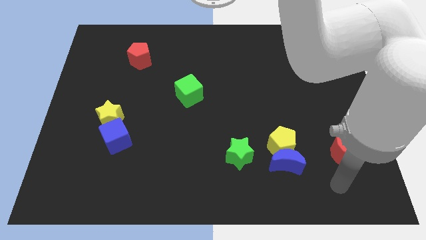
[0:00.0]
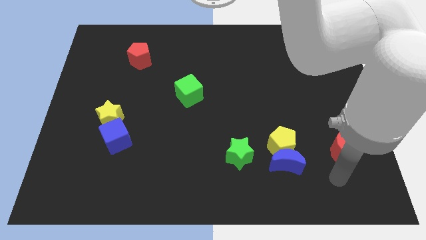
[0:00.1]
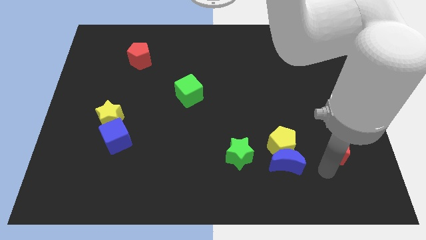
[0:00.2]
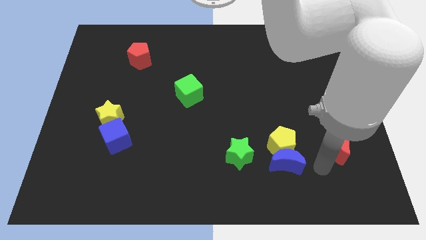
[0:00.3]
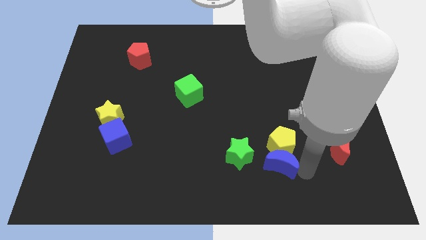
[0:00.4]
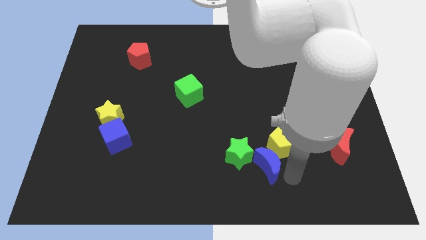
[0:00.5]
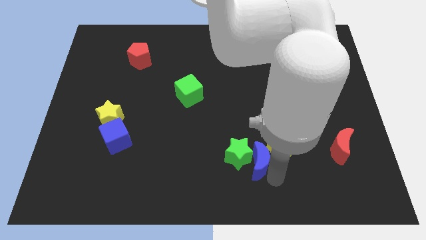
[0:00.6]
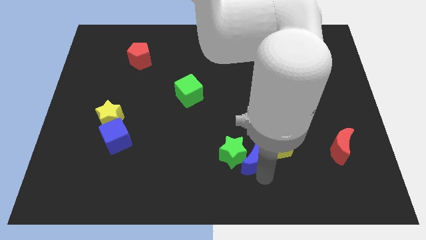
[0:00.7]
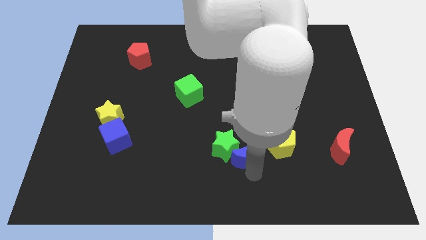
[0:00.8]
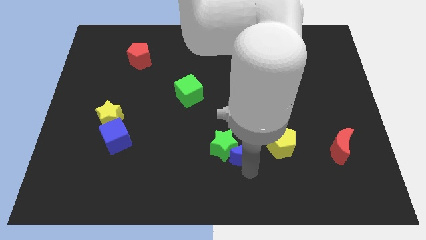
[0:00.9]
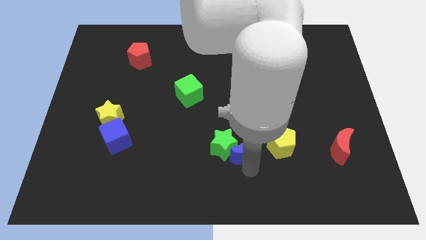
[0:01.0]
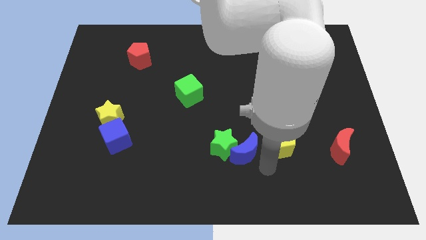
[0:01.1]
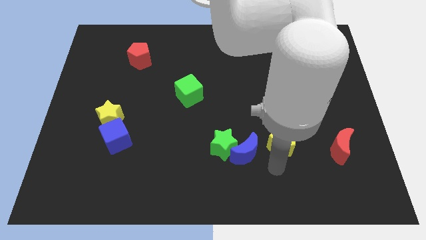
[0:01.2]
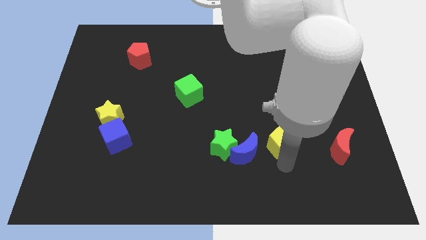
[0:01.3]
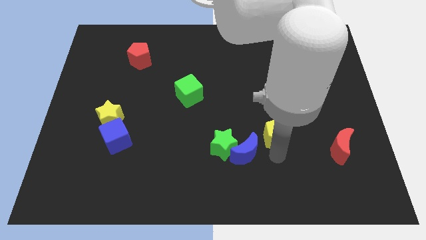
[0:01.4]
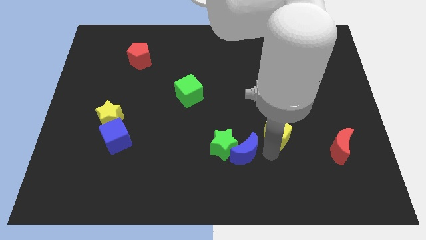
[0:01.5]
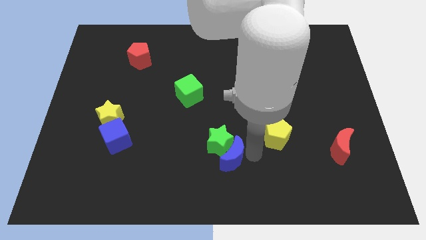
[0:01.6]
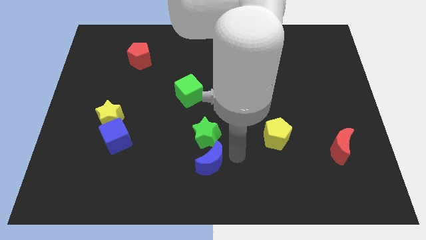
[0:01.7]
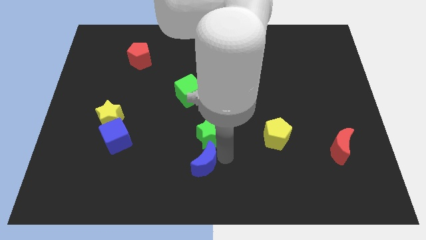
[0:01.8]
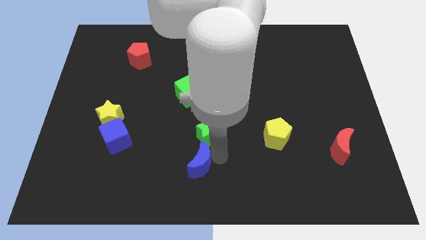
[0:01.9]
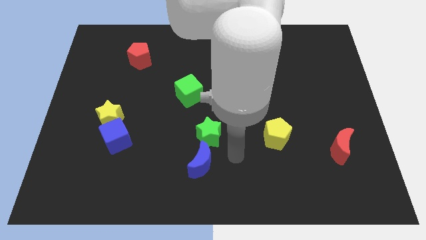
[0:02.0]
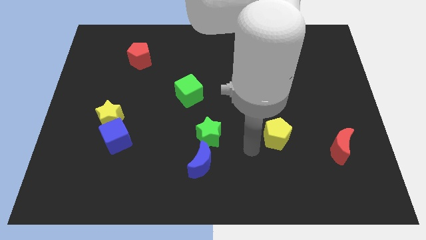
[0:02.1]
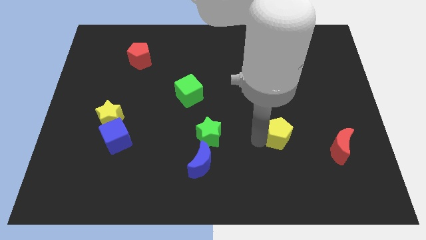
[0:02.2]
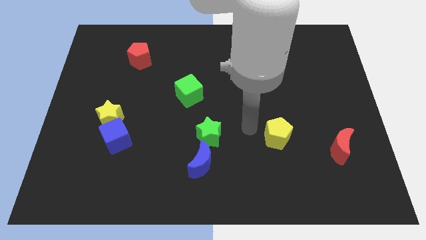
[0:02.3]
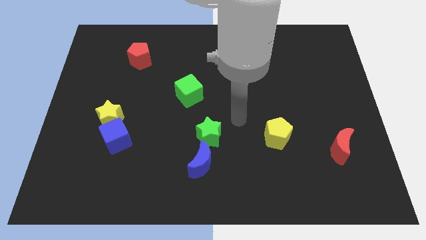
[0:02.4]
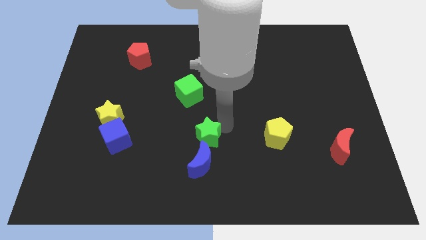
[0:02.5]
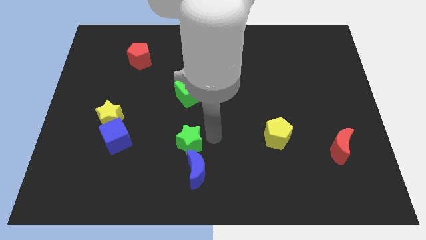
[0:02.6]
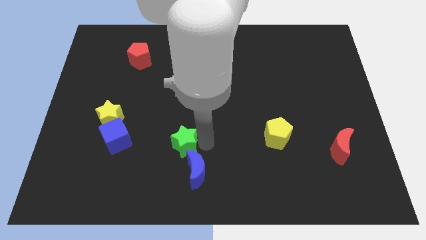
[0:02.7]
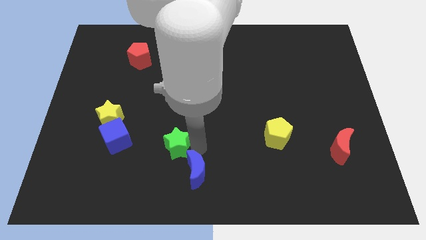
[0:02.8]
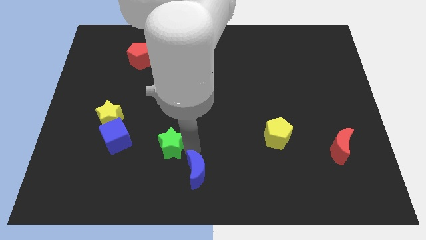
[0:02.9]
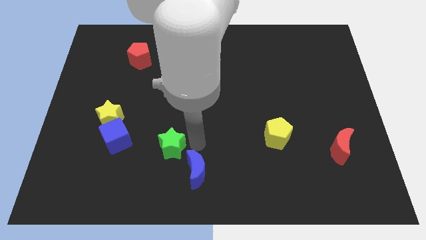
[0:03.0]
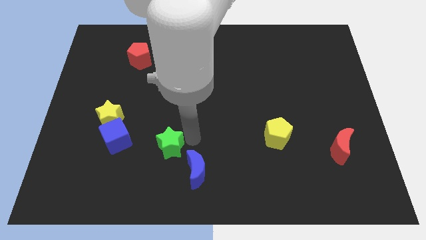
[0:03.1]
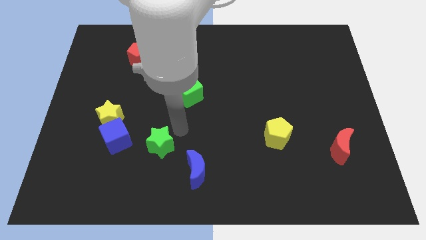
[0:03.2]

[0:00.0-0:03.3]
move the green star parallel to the blue cube

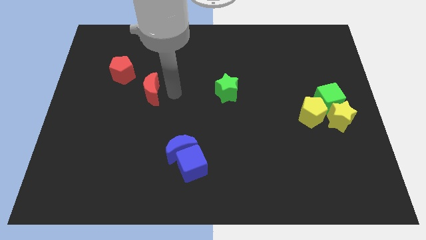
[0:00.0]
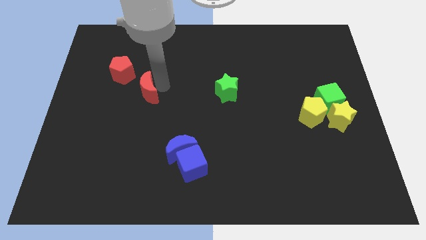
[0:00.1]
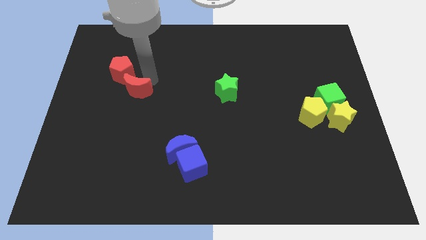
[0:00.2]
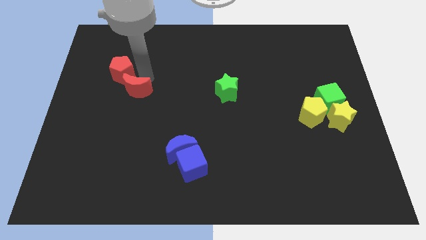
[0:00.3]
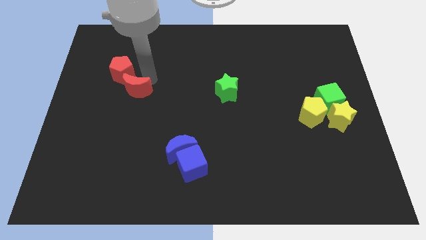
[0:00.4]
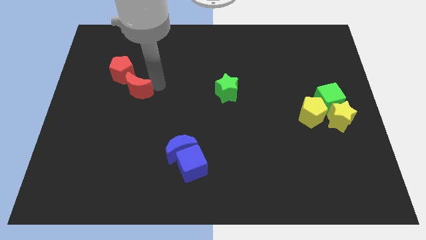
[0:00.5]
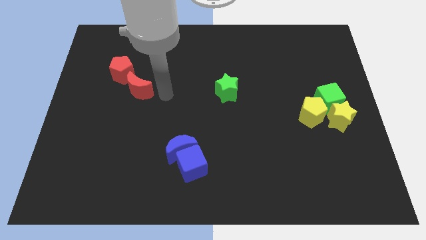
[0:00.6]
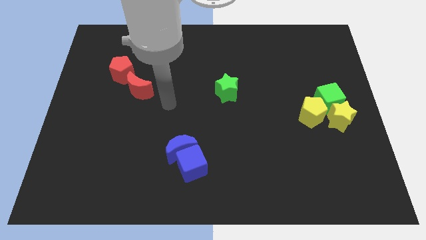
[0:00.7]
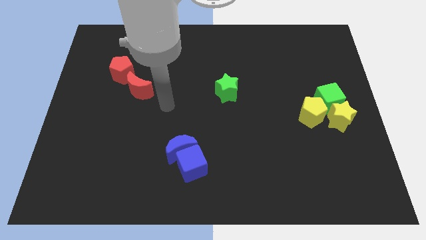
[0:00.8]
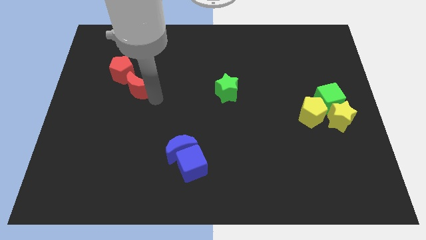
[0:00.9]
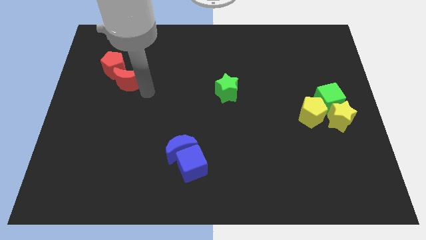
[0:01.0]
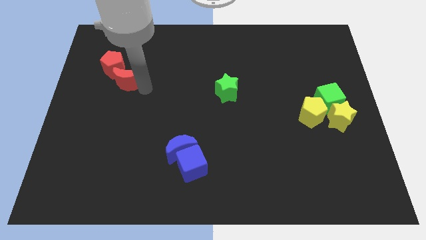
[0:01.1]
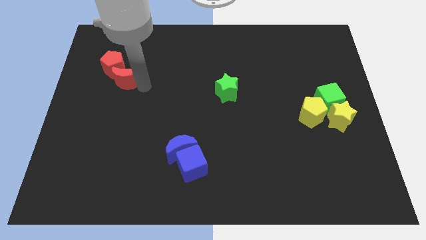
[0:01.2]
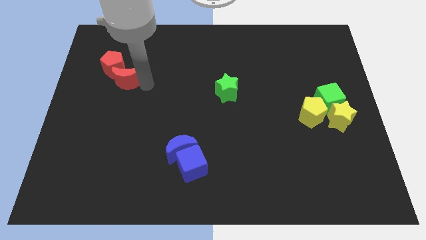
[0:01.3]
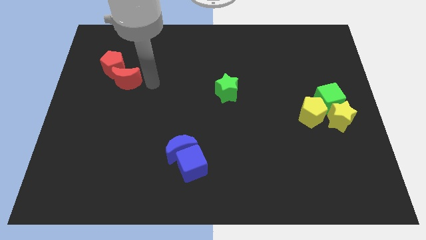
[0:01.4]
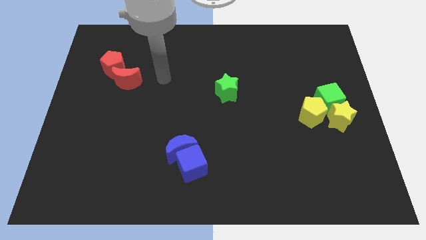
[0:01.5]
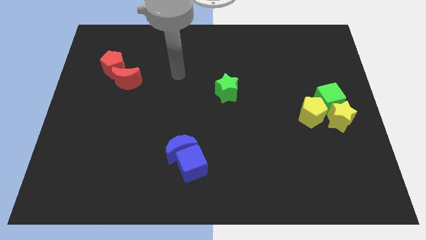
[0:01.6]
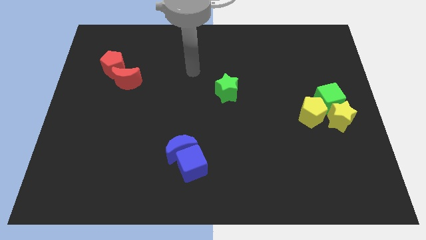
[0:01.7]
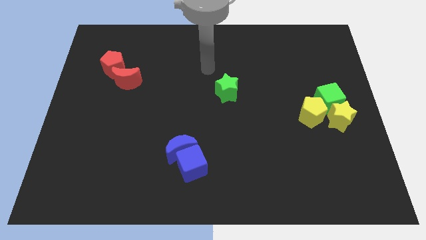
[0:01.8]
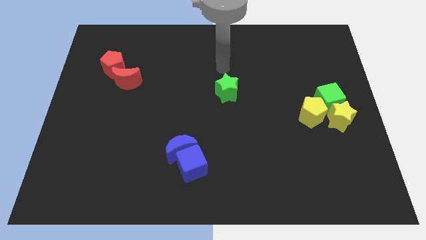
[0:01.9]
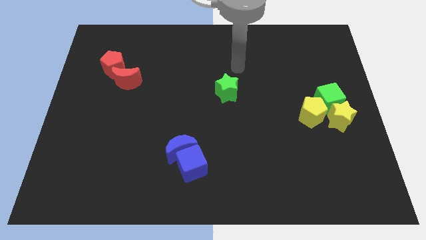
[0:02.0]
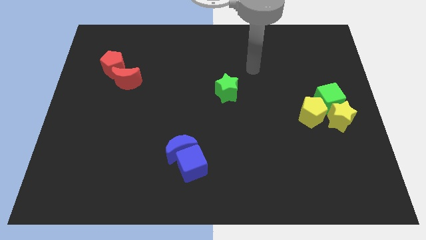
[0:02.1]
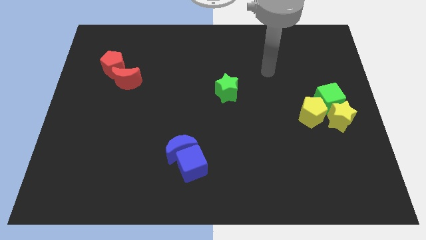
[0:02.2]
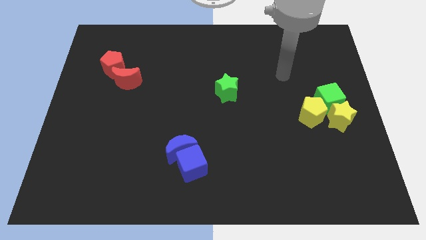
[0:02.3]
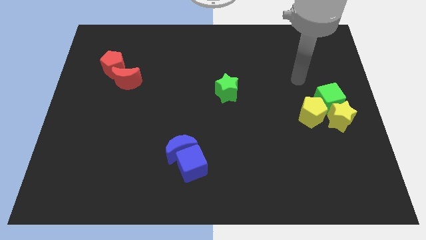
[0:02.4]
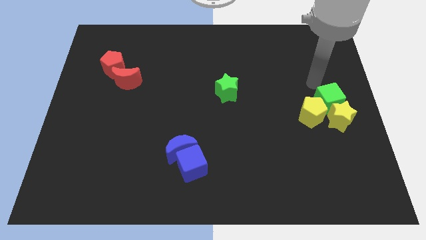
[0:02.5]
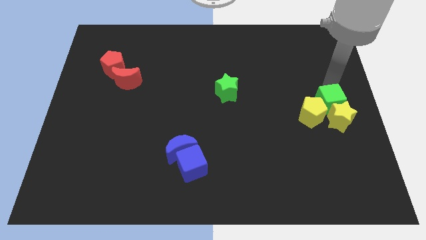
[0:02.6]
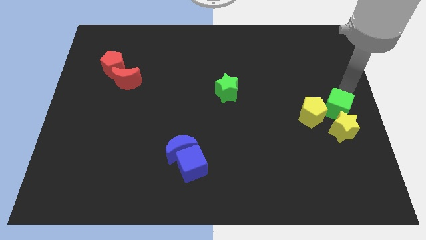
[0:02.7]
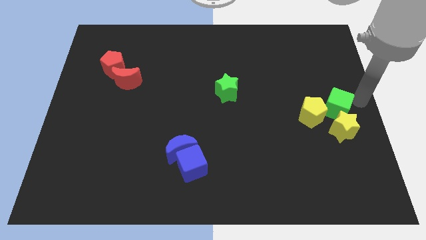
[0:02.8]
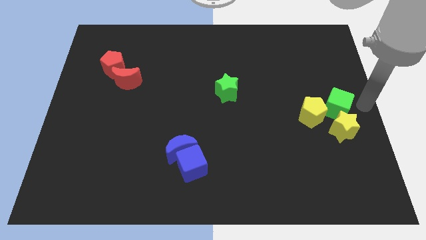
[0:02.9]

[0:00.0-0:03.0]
slightly push down the yellow star with a green cube

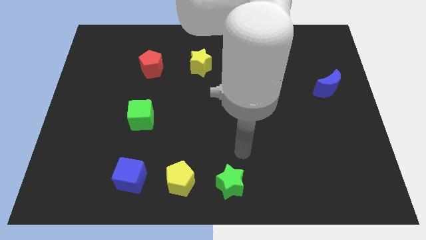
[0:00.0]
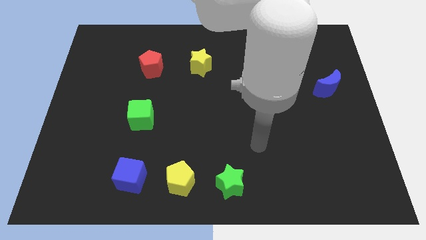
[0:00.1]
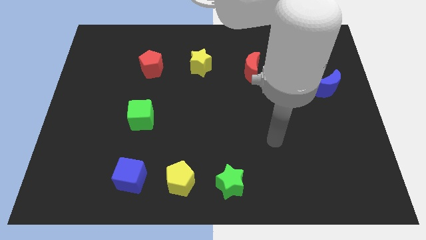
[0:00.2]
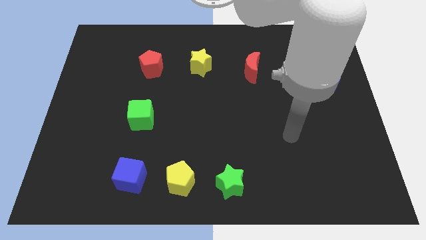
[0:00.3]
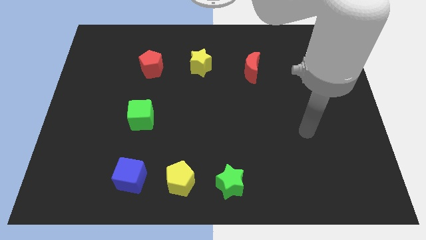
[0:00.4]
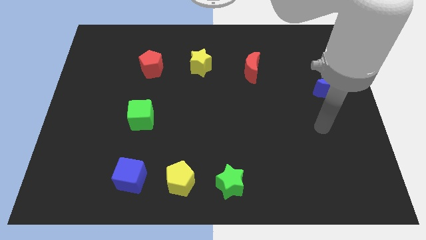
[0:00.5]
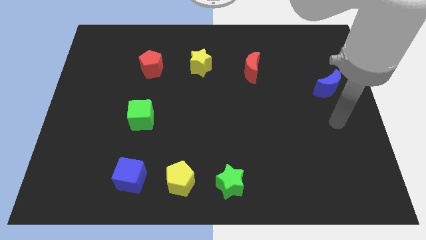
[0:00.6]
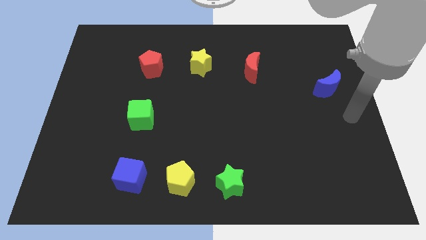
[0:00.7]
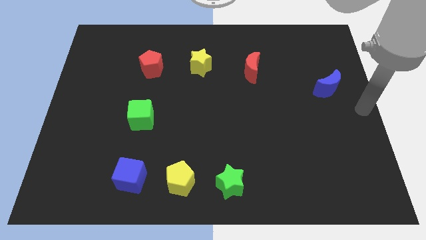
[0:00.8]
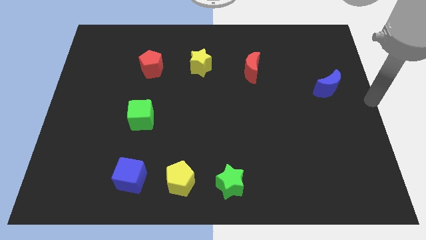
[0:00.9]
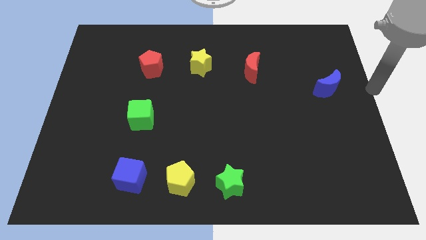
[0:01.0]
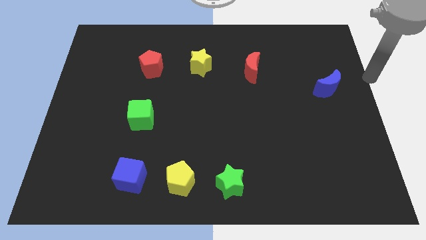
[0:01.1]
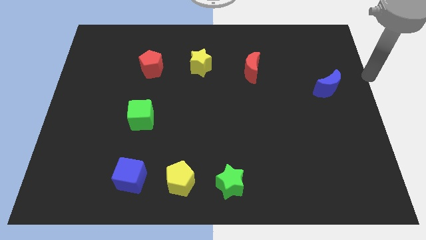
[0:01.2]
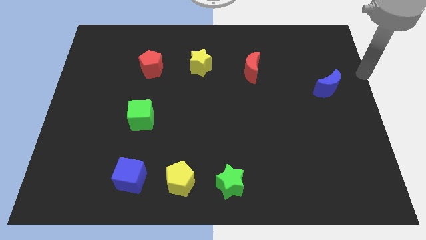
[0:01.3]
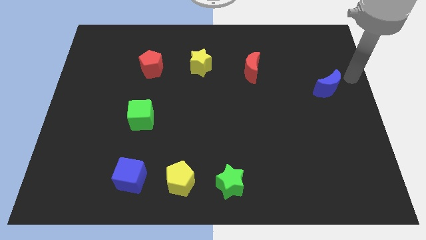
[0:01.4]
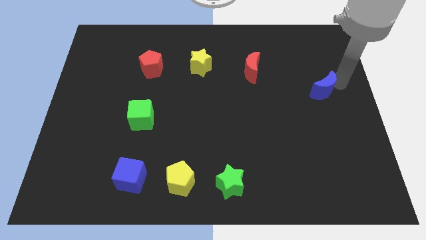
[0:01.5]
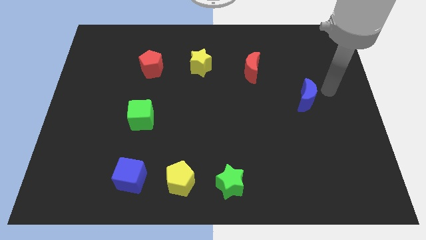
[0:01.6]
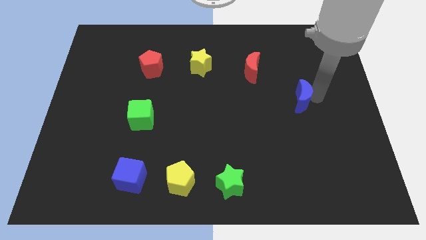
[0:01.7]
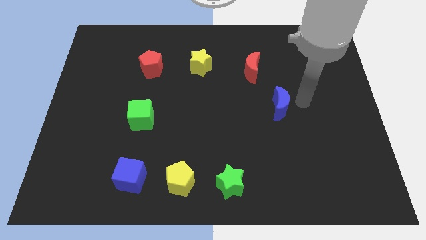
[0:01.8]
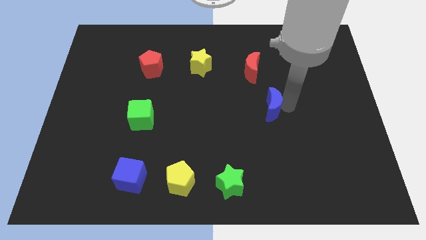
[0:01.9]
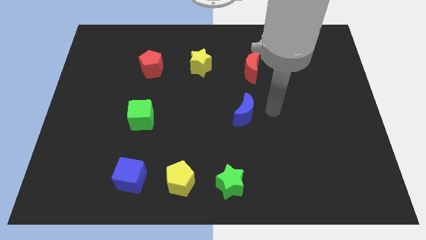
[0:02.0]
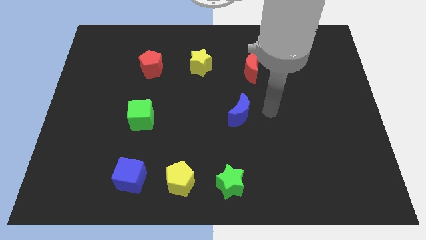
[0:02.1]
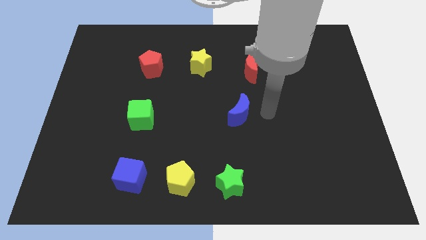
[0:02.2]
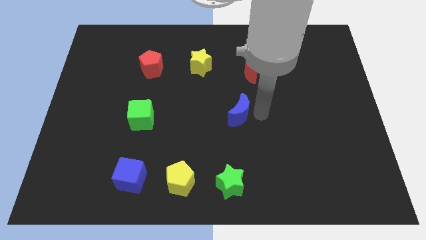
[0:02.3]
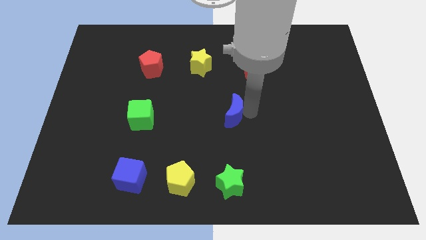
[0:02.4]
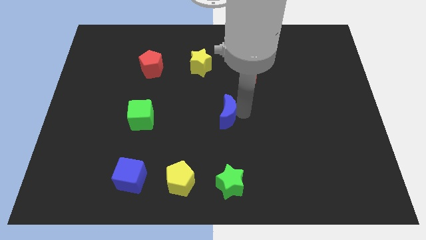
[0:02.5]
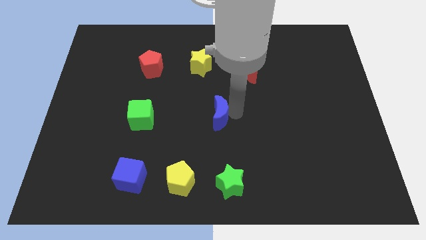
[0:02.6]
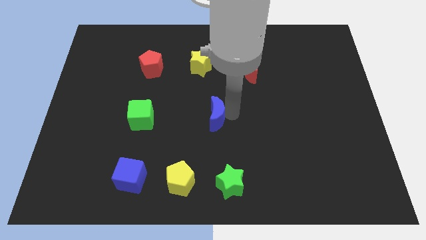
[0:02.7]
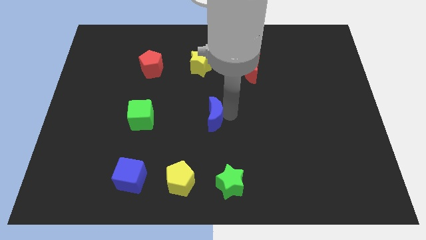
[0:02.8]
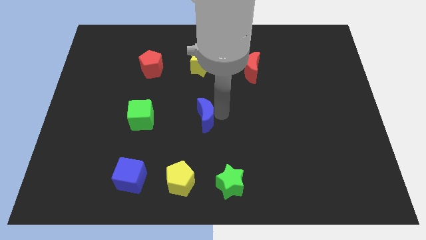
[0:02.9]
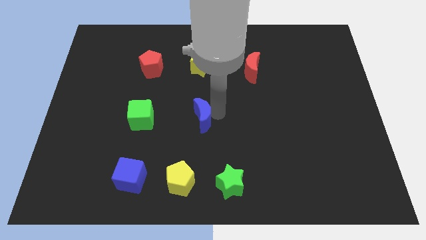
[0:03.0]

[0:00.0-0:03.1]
push the blue crescent below the yellow star
